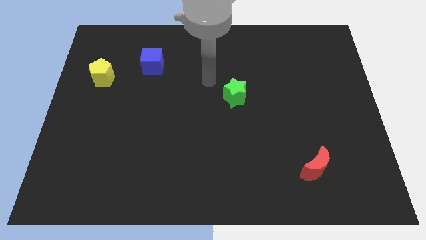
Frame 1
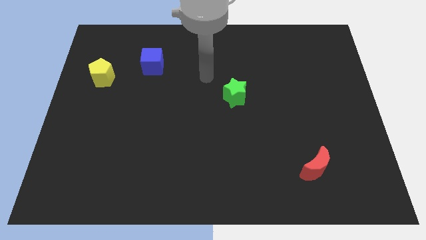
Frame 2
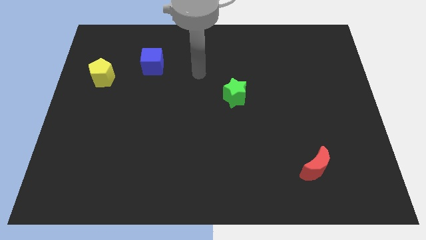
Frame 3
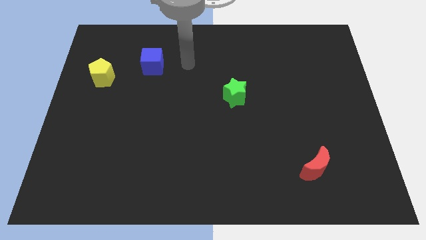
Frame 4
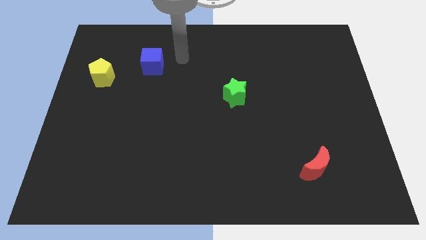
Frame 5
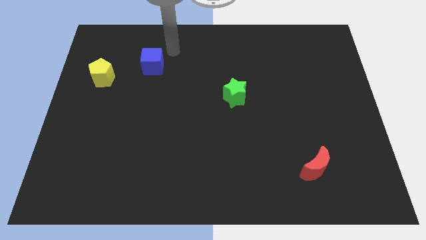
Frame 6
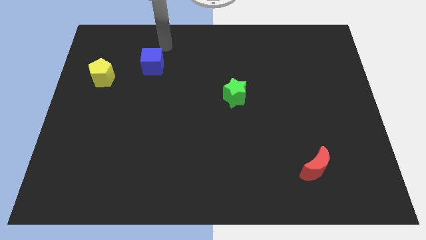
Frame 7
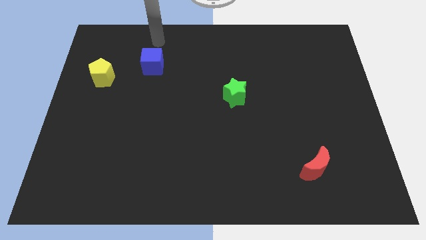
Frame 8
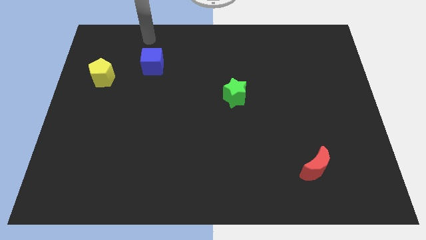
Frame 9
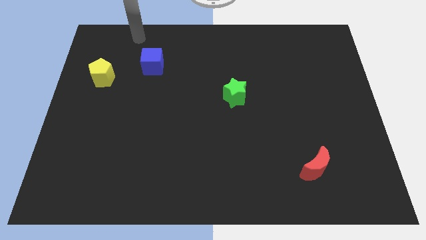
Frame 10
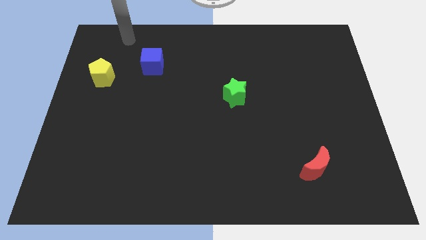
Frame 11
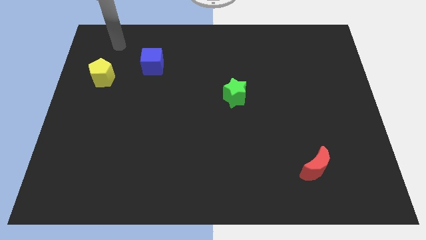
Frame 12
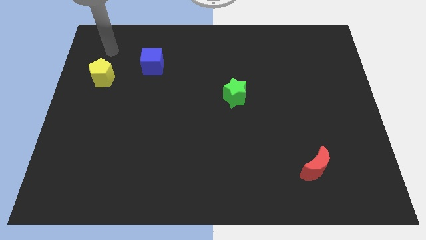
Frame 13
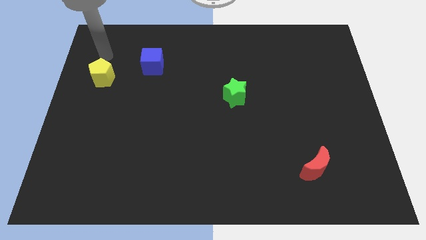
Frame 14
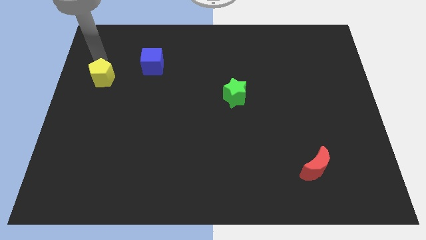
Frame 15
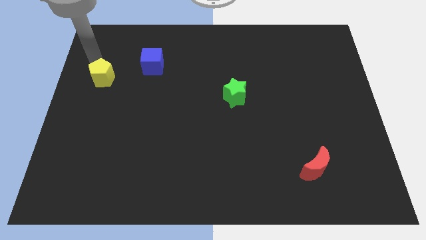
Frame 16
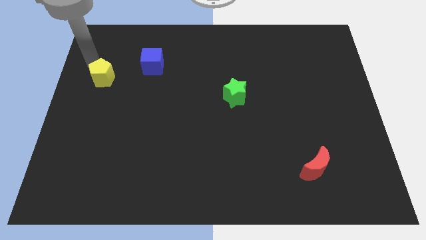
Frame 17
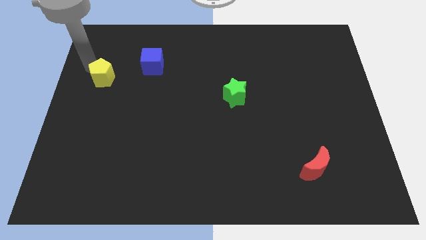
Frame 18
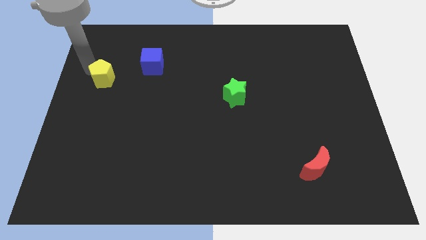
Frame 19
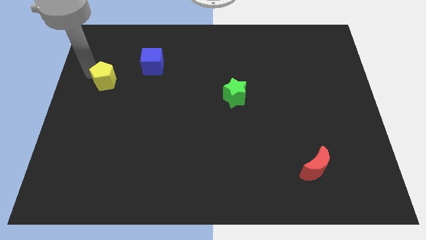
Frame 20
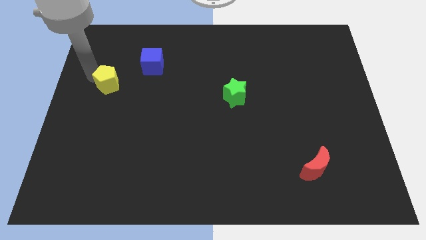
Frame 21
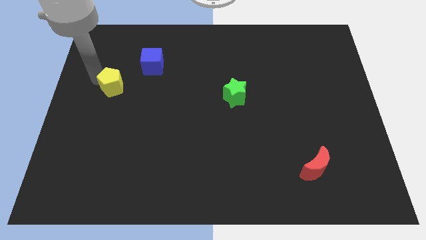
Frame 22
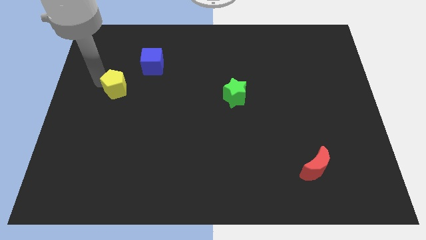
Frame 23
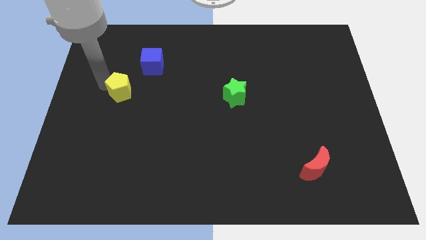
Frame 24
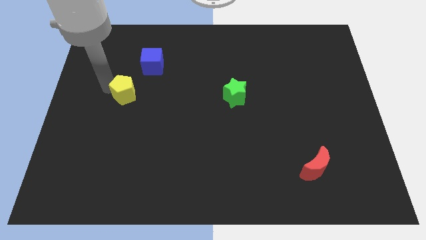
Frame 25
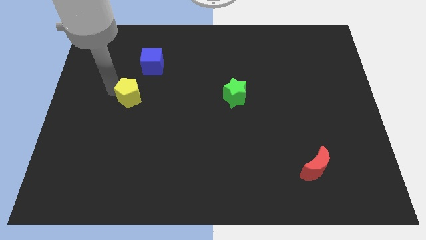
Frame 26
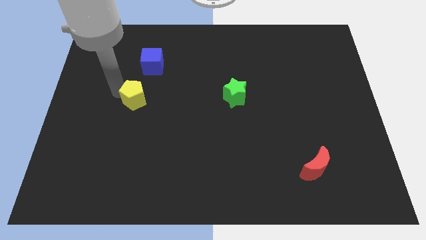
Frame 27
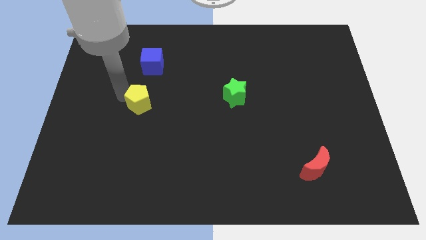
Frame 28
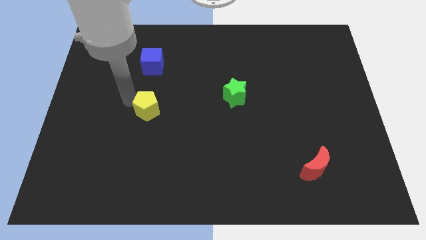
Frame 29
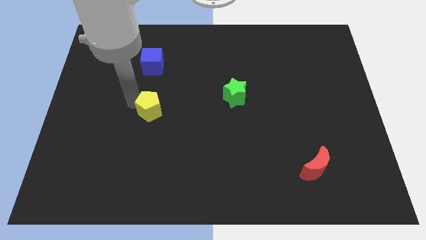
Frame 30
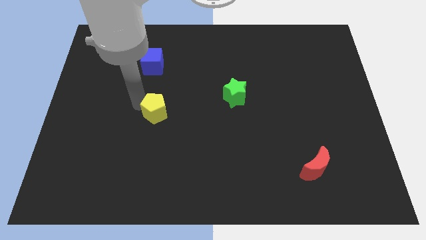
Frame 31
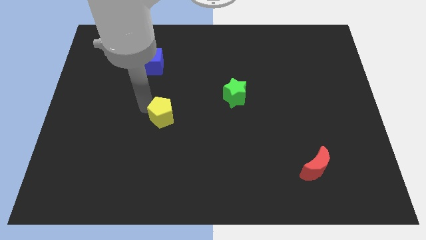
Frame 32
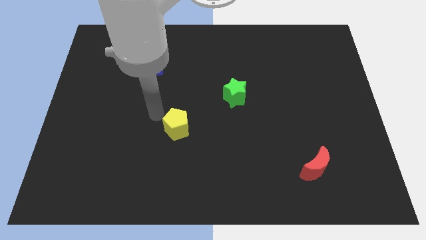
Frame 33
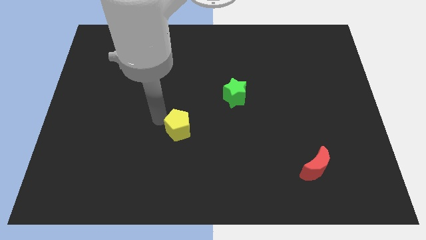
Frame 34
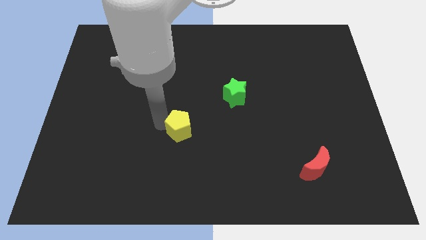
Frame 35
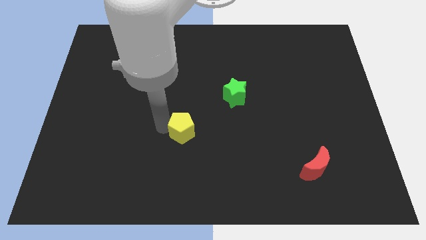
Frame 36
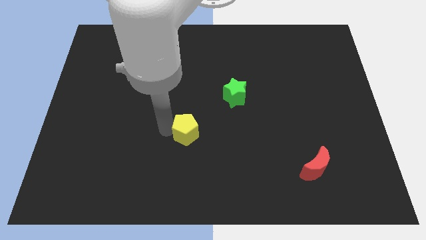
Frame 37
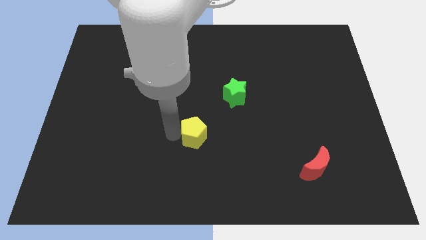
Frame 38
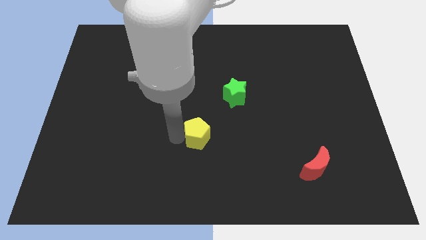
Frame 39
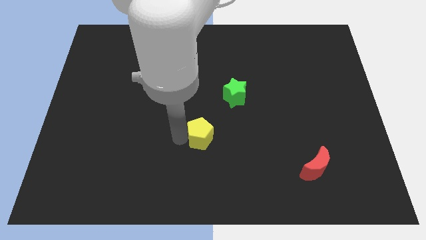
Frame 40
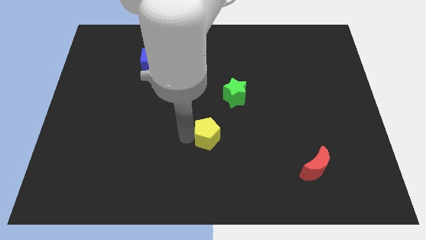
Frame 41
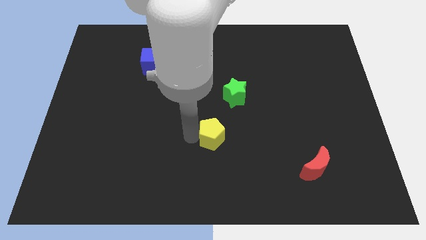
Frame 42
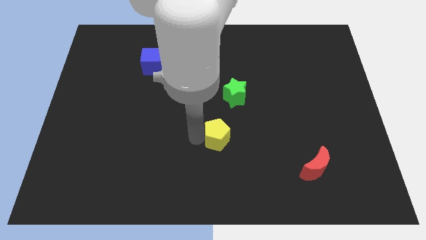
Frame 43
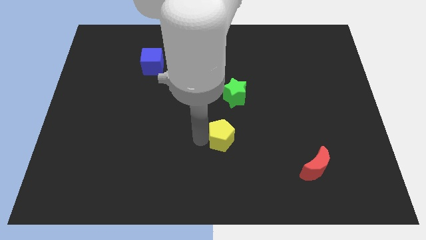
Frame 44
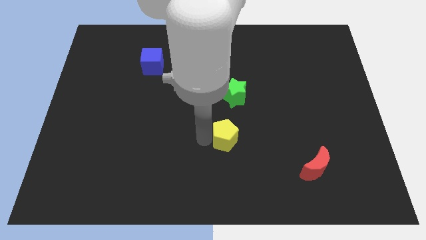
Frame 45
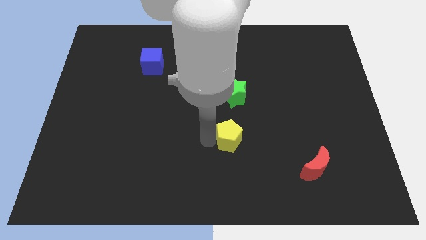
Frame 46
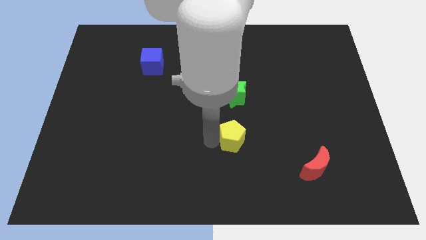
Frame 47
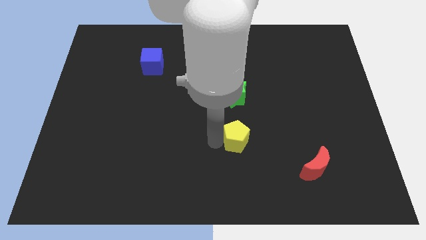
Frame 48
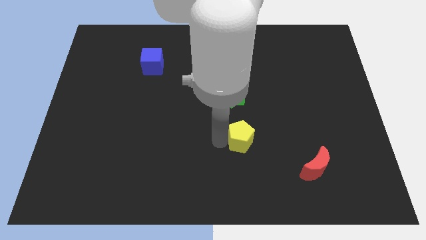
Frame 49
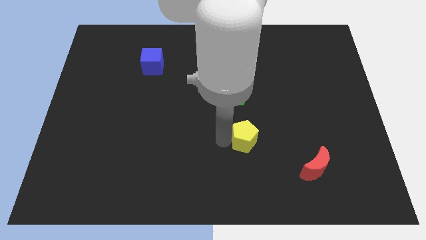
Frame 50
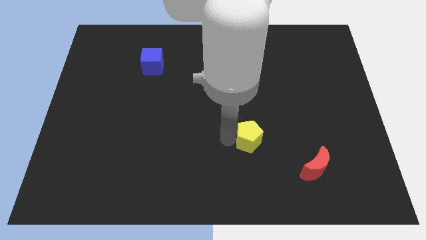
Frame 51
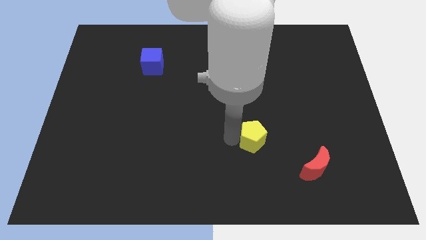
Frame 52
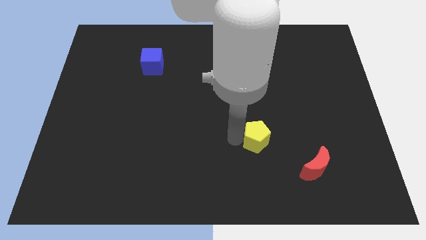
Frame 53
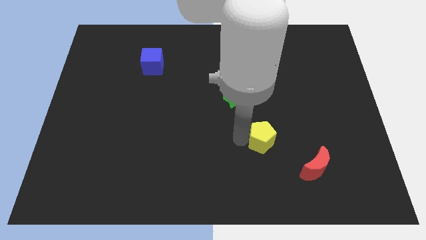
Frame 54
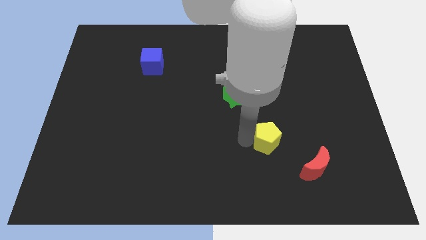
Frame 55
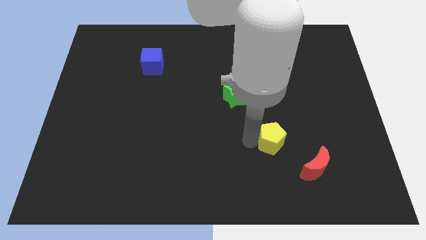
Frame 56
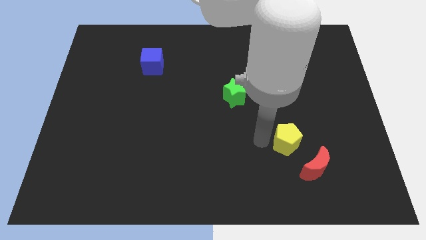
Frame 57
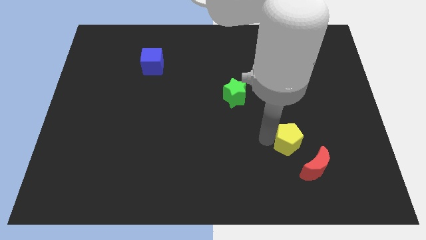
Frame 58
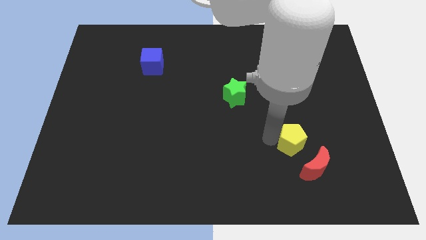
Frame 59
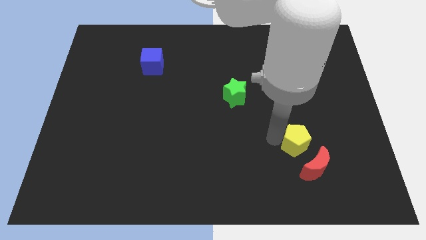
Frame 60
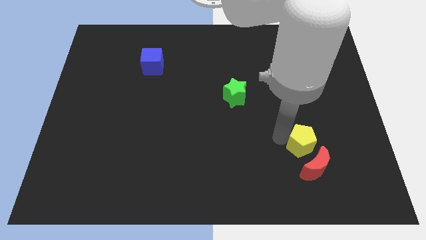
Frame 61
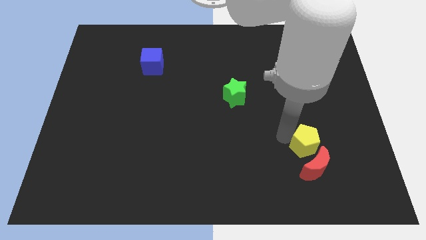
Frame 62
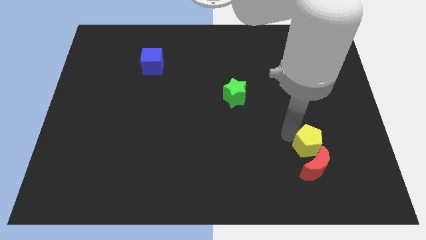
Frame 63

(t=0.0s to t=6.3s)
put the yellow block next to the red moon

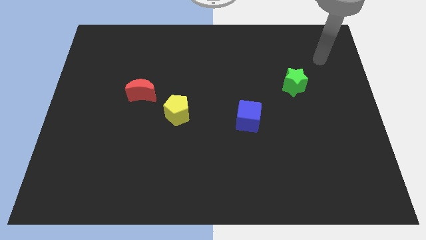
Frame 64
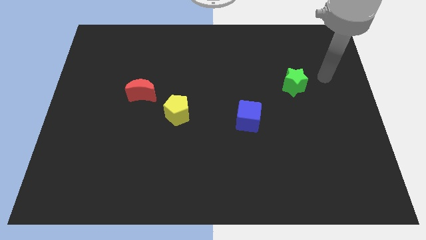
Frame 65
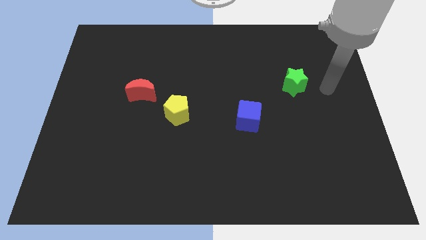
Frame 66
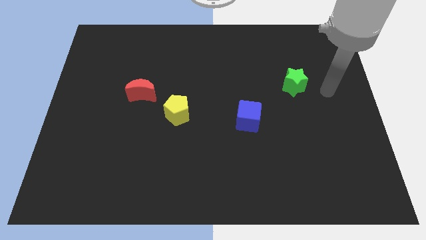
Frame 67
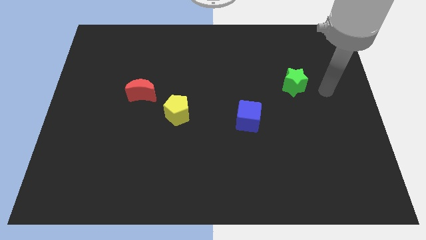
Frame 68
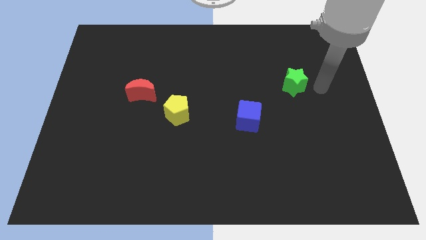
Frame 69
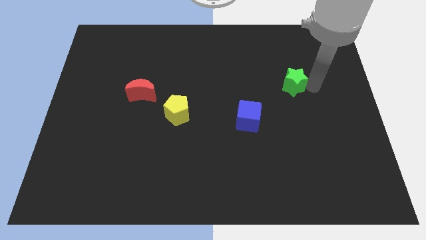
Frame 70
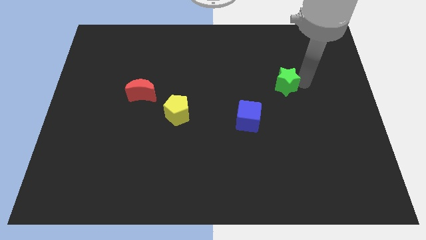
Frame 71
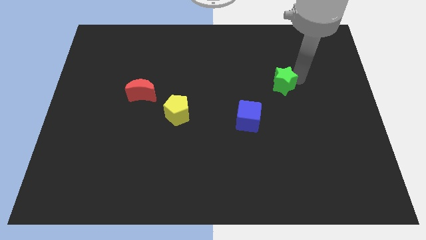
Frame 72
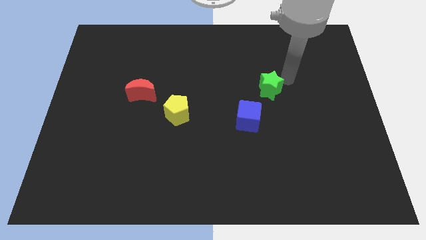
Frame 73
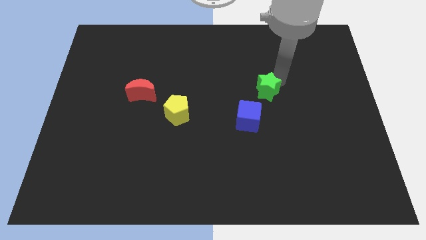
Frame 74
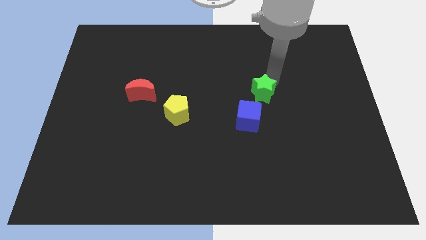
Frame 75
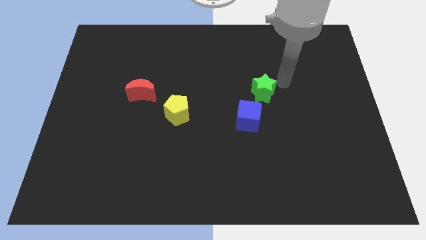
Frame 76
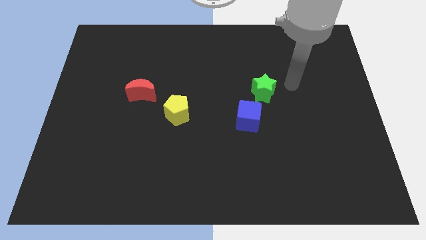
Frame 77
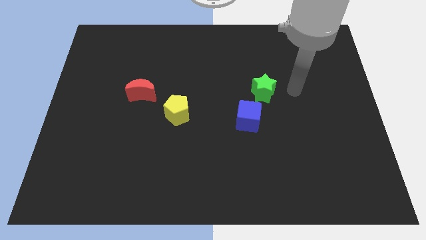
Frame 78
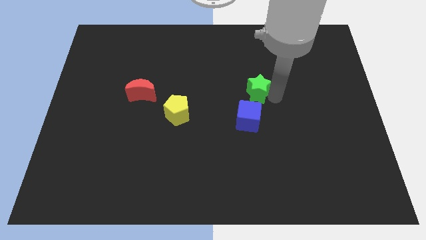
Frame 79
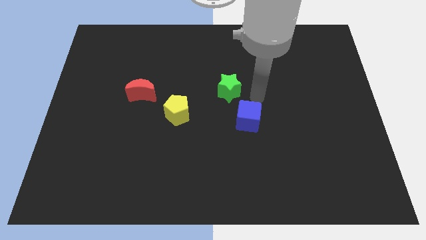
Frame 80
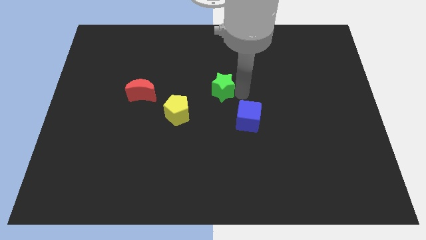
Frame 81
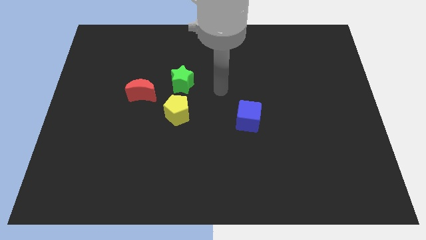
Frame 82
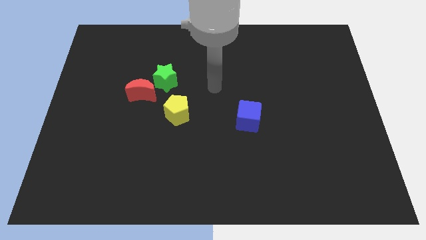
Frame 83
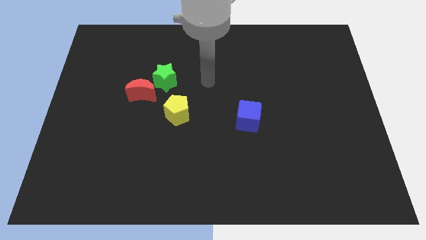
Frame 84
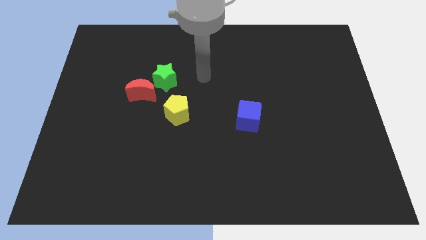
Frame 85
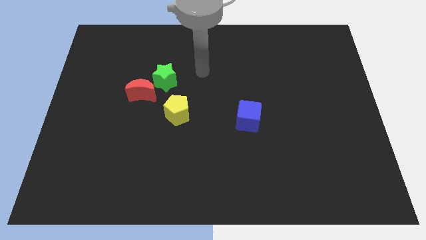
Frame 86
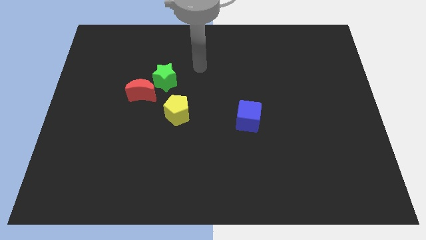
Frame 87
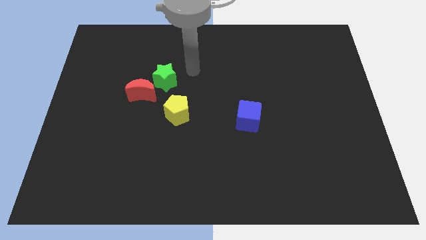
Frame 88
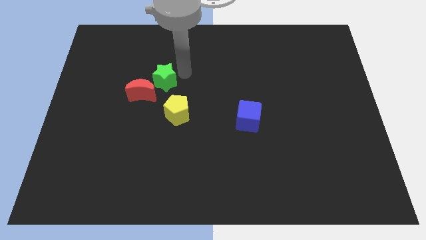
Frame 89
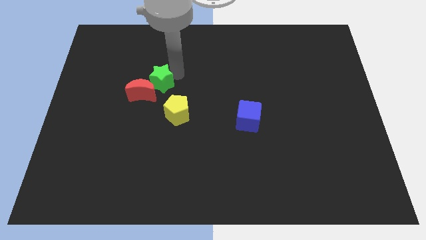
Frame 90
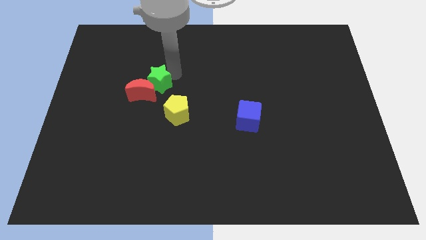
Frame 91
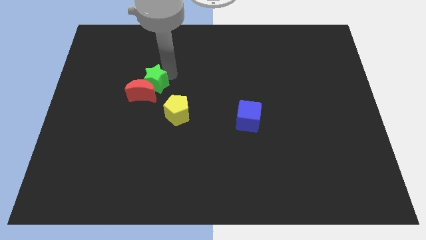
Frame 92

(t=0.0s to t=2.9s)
put the green star to the moon
